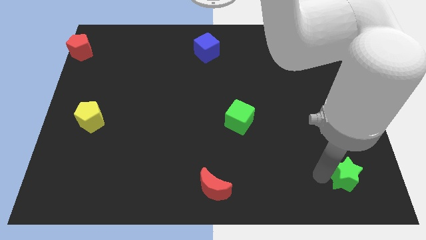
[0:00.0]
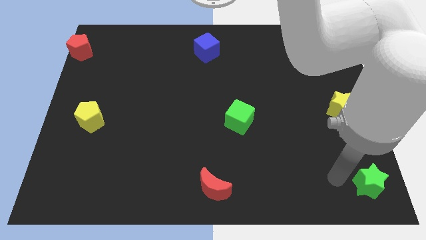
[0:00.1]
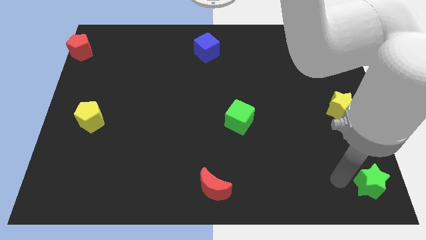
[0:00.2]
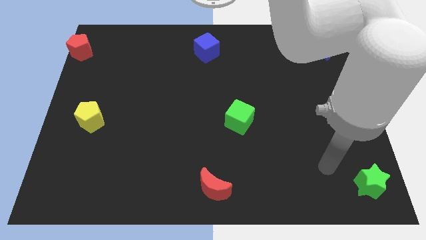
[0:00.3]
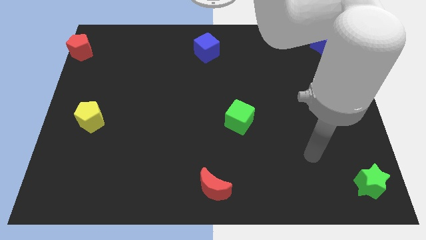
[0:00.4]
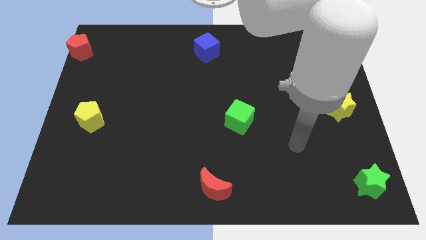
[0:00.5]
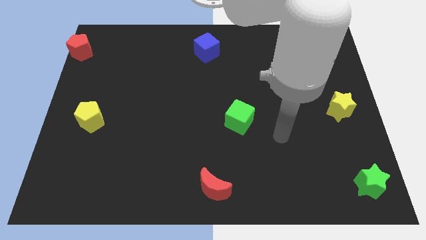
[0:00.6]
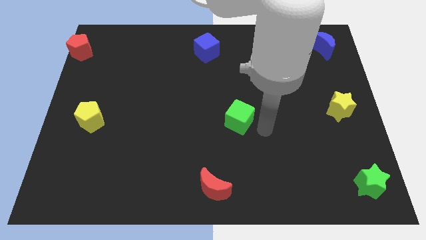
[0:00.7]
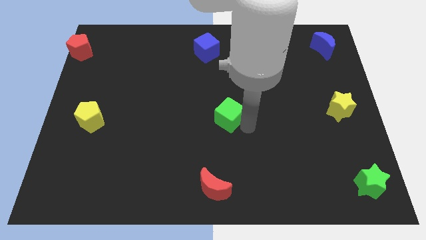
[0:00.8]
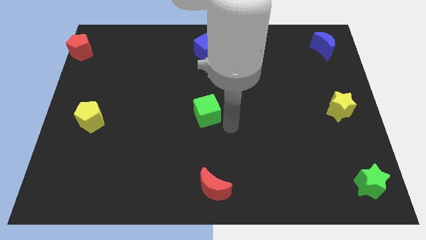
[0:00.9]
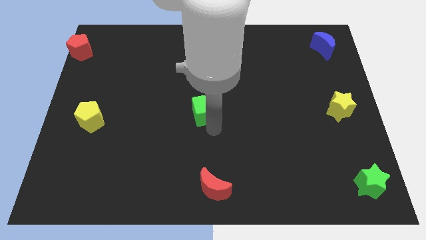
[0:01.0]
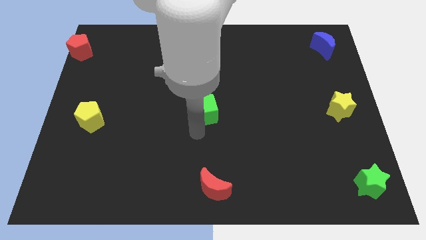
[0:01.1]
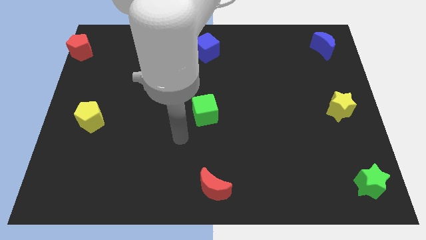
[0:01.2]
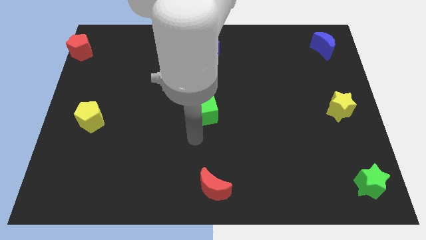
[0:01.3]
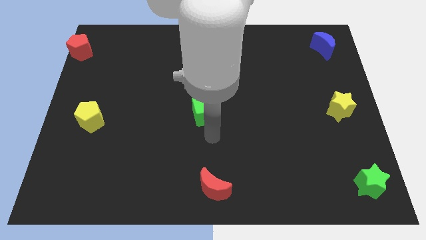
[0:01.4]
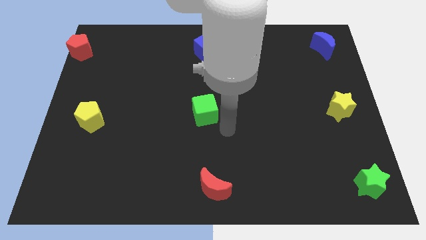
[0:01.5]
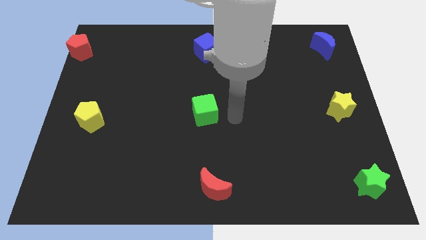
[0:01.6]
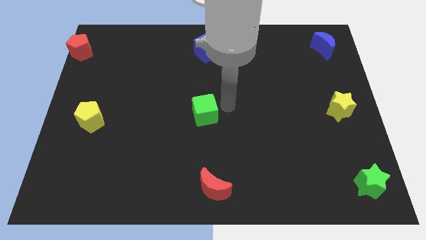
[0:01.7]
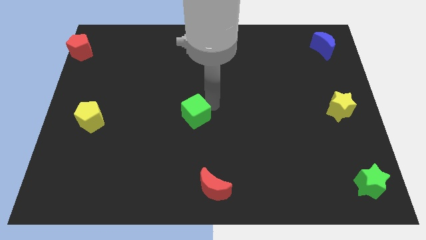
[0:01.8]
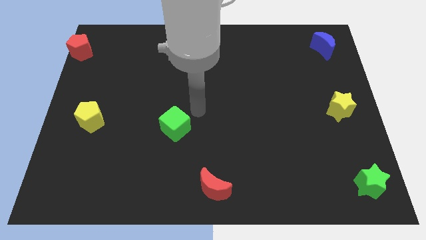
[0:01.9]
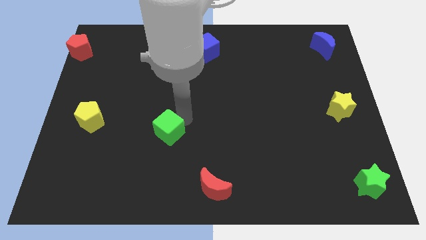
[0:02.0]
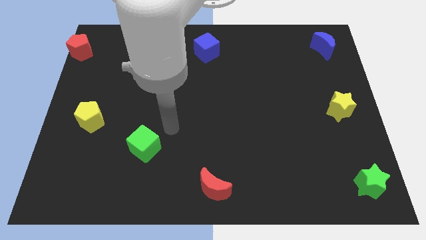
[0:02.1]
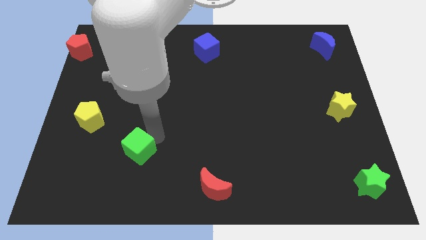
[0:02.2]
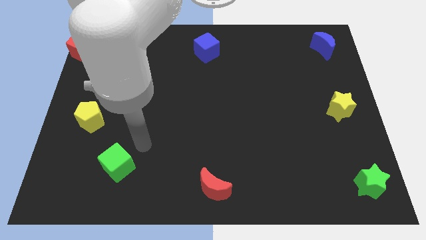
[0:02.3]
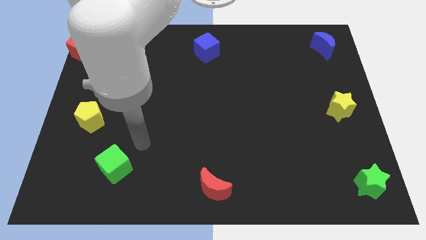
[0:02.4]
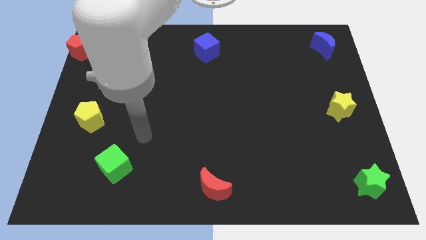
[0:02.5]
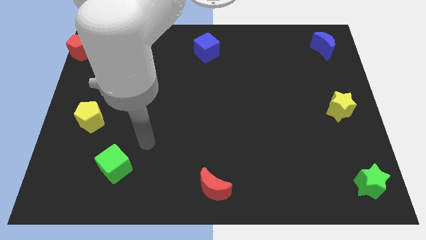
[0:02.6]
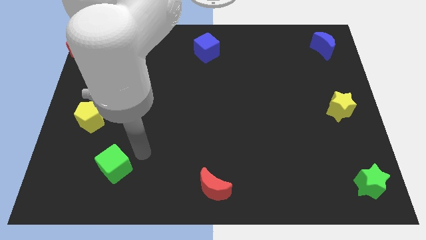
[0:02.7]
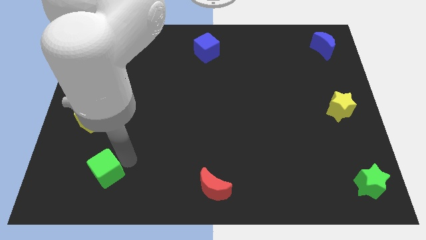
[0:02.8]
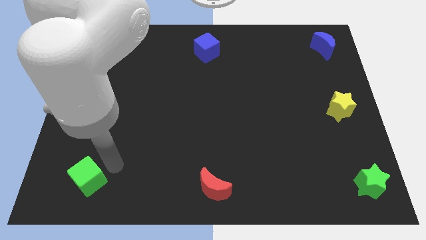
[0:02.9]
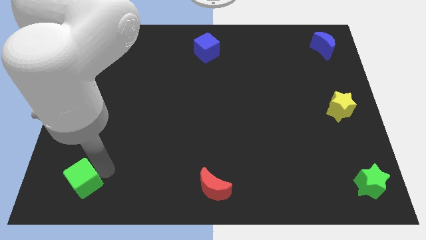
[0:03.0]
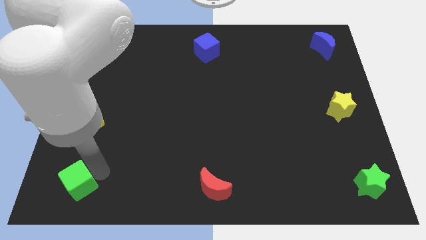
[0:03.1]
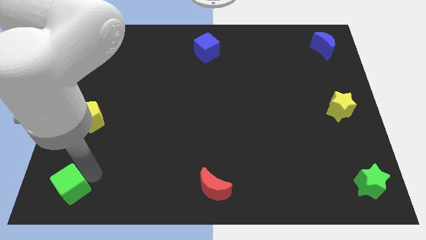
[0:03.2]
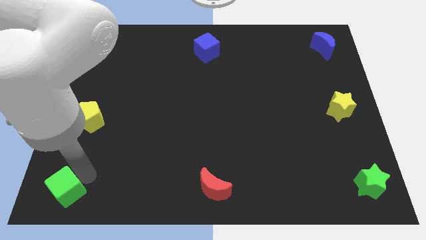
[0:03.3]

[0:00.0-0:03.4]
move green cube to the bottom left corner of the board

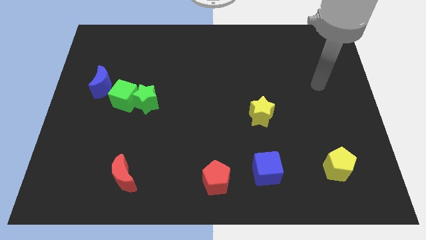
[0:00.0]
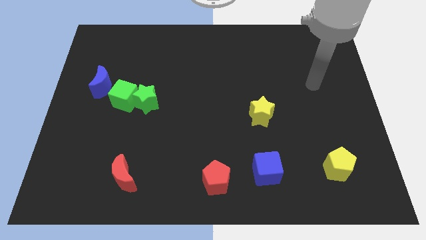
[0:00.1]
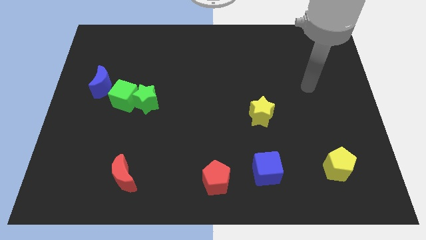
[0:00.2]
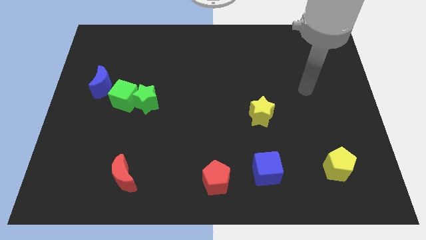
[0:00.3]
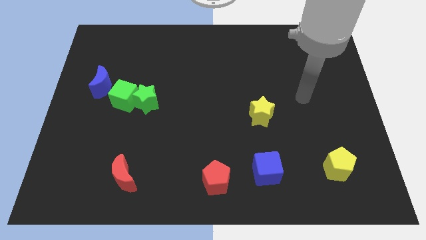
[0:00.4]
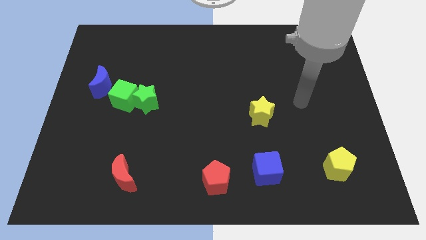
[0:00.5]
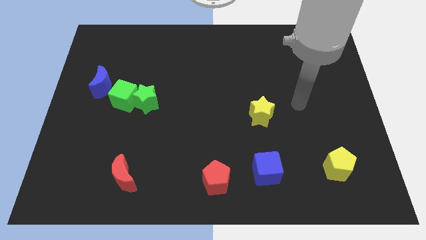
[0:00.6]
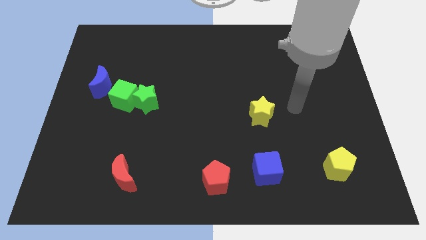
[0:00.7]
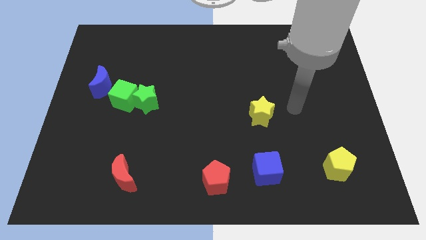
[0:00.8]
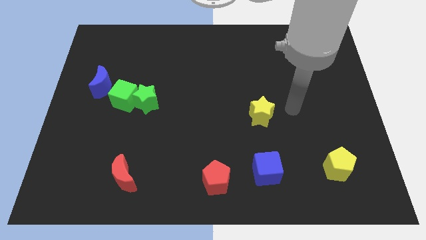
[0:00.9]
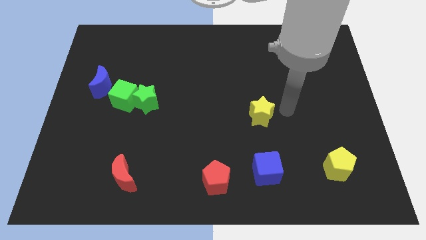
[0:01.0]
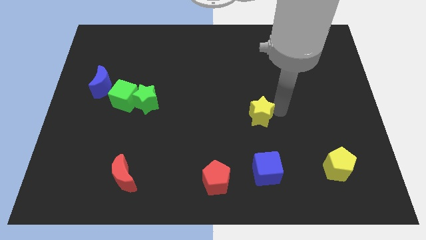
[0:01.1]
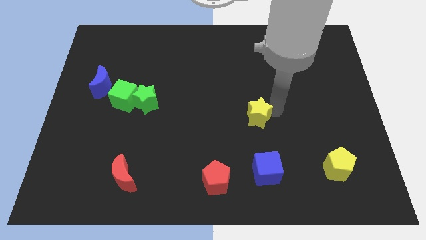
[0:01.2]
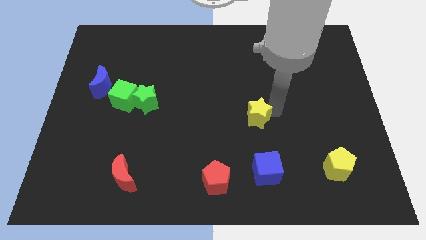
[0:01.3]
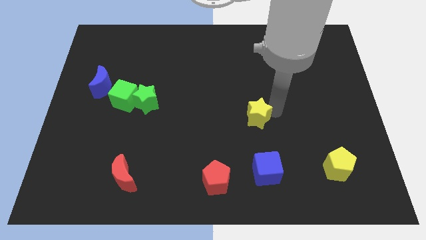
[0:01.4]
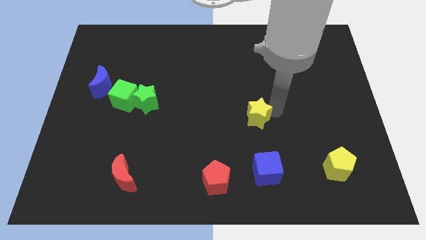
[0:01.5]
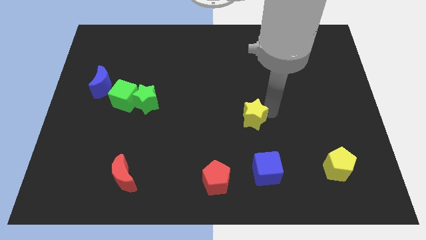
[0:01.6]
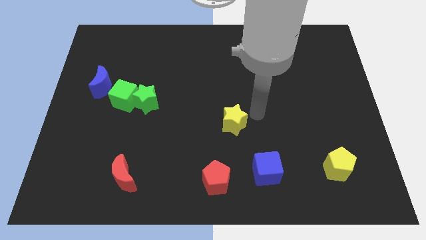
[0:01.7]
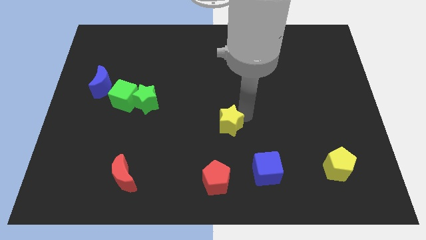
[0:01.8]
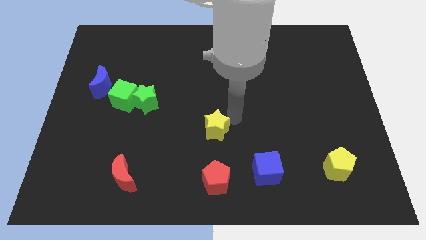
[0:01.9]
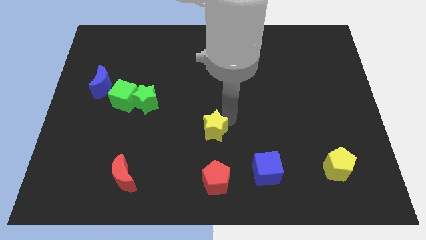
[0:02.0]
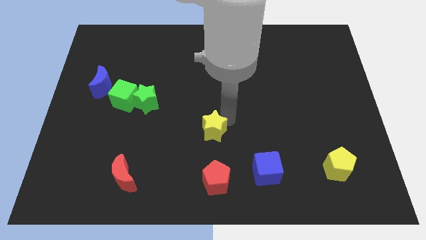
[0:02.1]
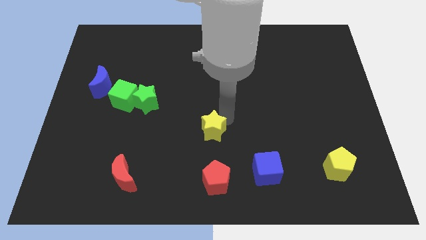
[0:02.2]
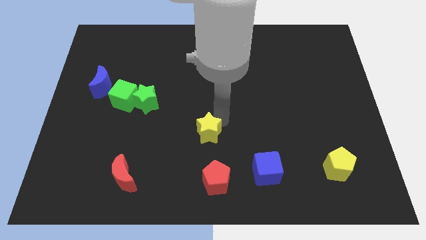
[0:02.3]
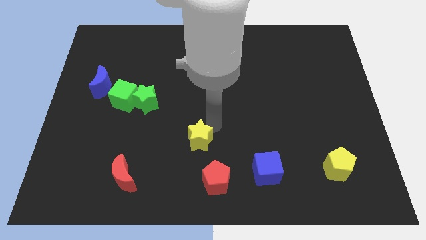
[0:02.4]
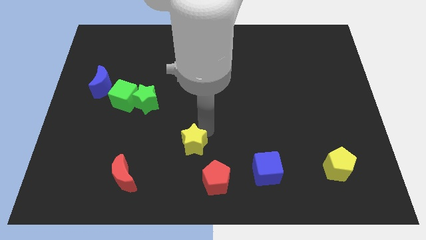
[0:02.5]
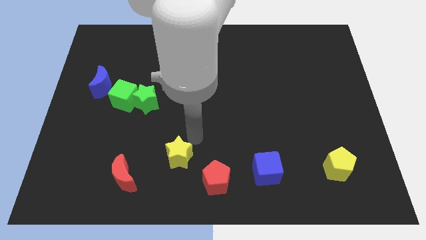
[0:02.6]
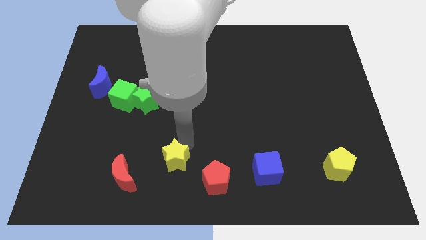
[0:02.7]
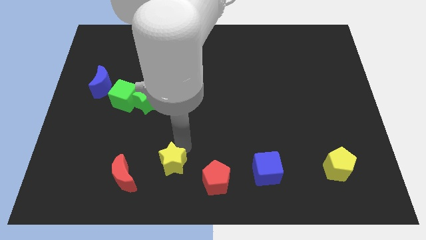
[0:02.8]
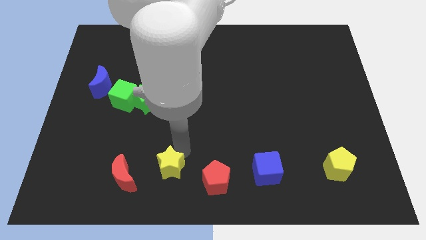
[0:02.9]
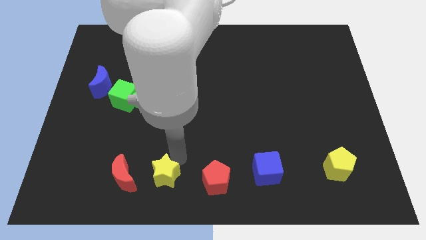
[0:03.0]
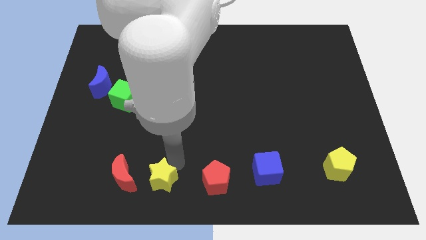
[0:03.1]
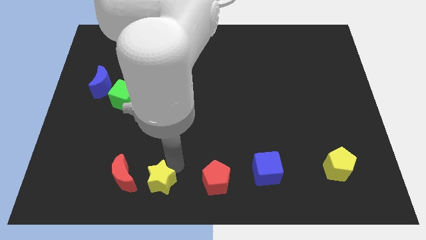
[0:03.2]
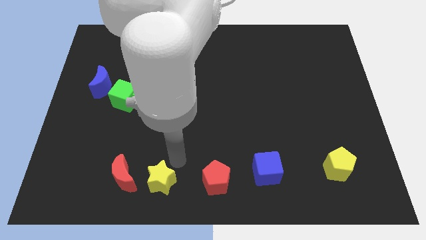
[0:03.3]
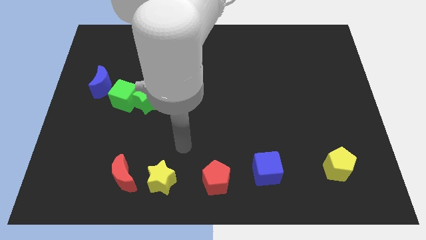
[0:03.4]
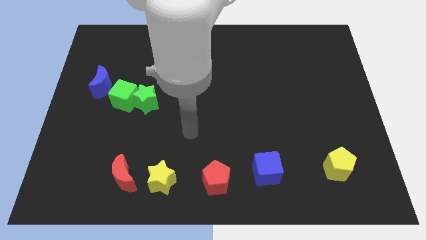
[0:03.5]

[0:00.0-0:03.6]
place the yellow star in between the red pentagon and red moon to form a line

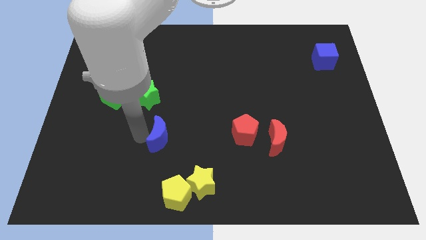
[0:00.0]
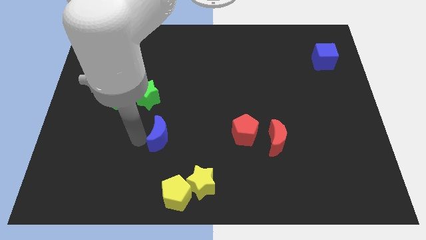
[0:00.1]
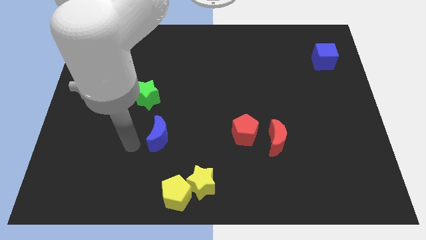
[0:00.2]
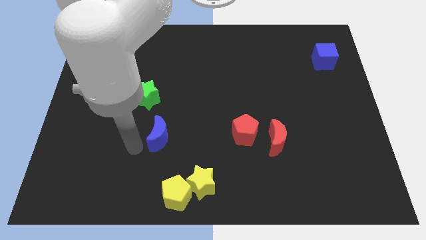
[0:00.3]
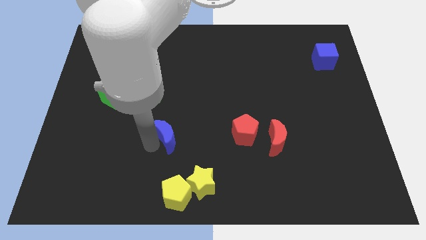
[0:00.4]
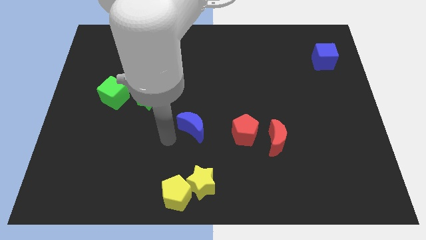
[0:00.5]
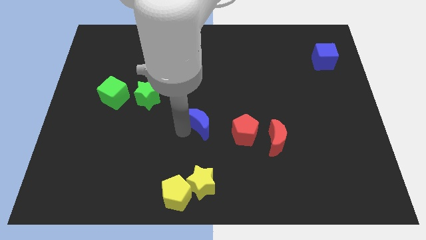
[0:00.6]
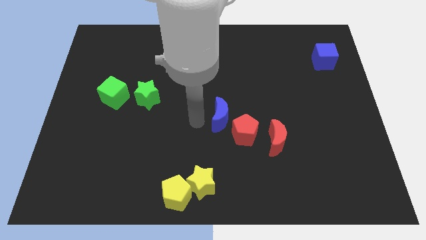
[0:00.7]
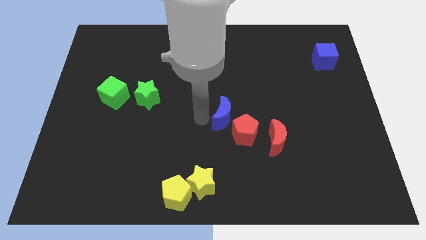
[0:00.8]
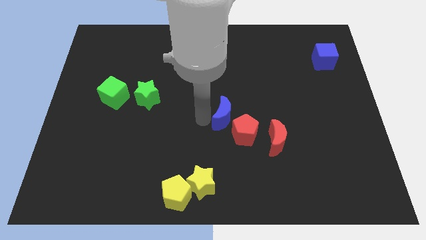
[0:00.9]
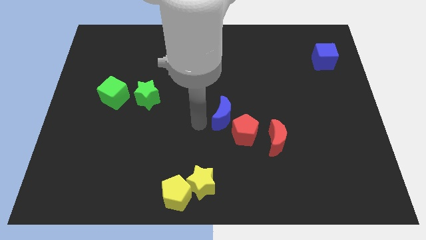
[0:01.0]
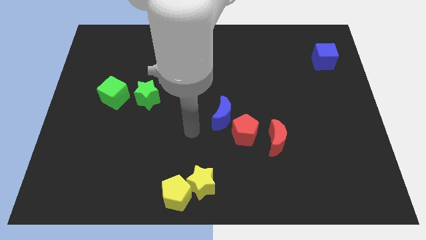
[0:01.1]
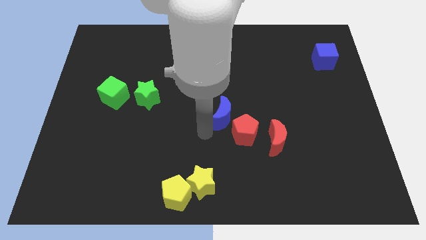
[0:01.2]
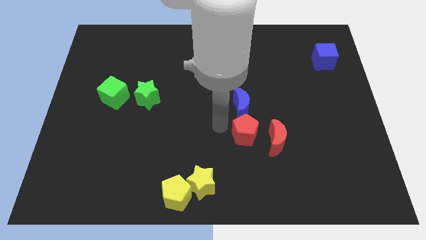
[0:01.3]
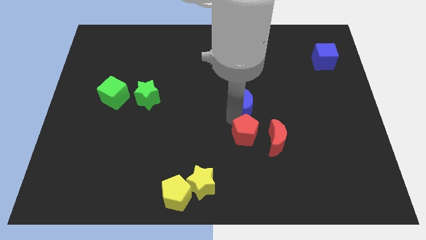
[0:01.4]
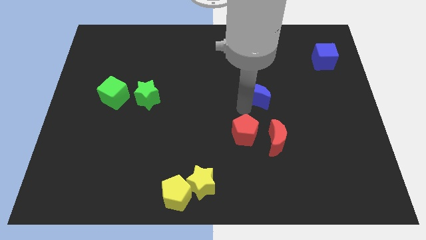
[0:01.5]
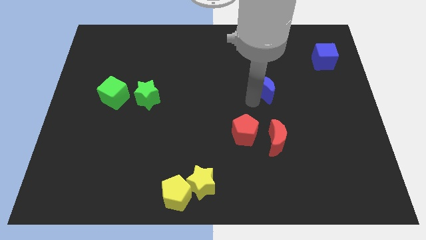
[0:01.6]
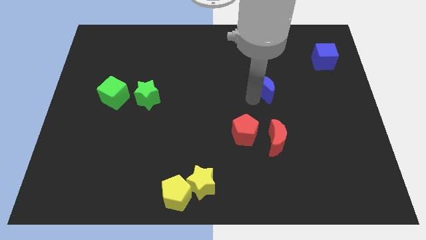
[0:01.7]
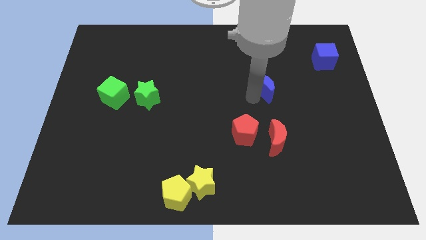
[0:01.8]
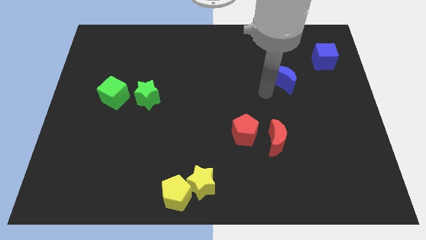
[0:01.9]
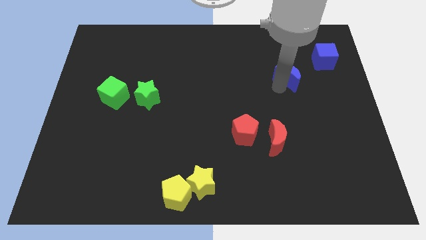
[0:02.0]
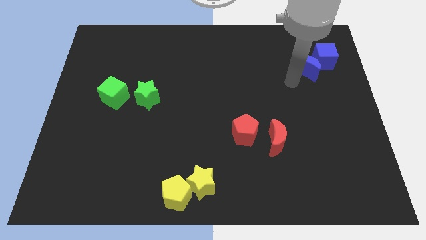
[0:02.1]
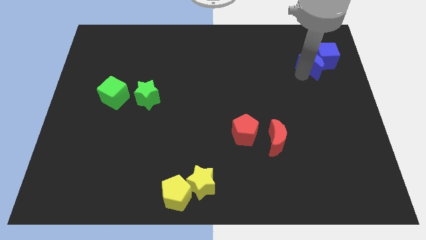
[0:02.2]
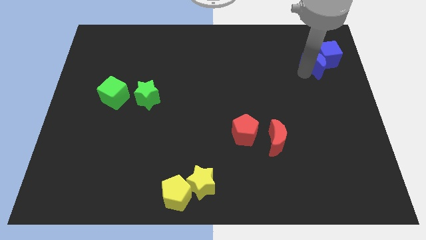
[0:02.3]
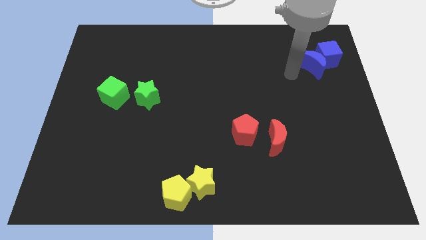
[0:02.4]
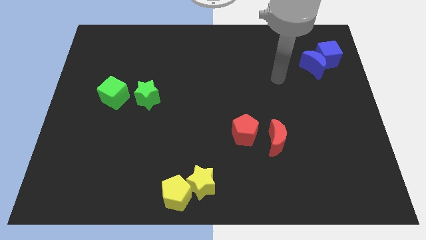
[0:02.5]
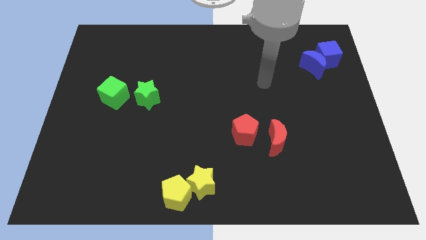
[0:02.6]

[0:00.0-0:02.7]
push blue moon in to blue cube
